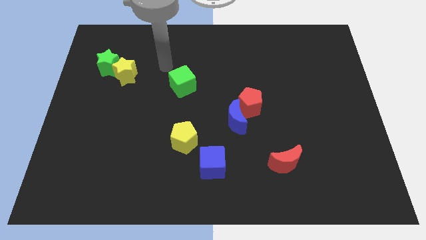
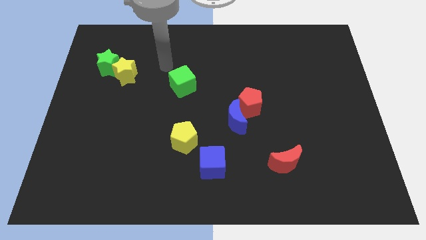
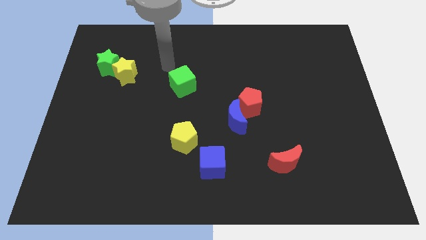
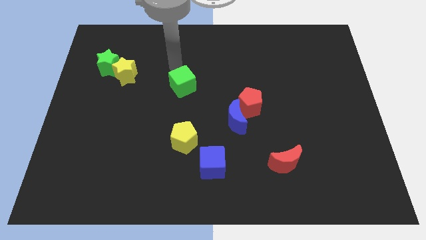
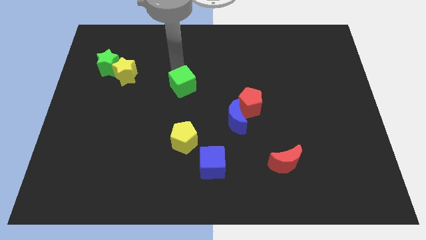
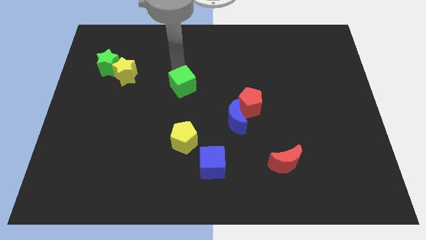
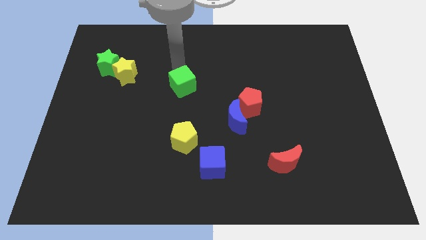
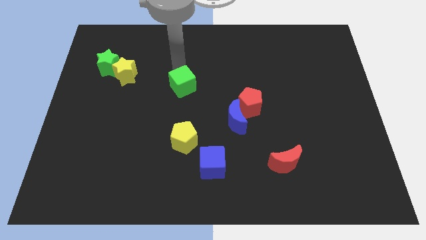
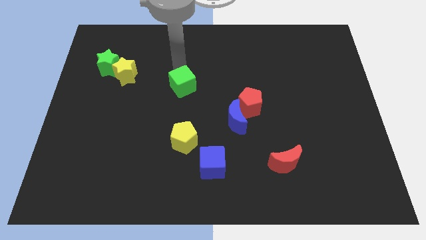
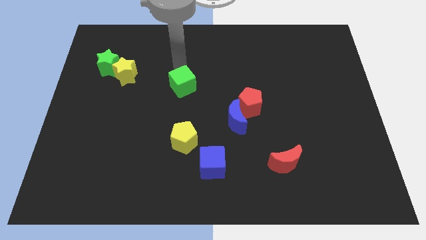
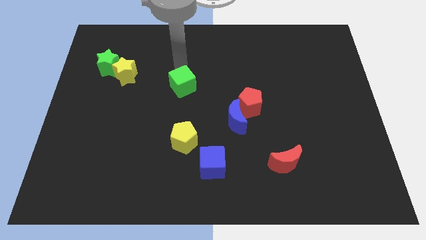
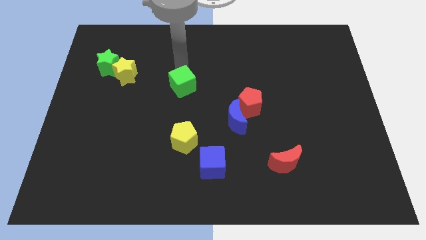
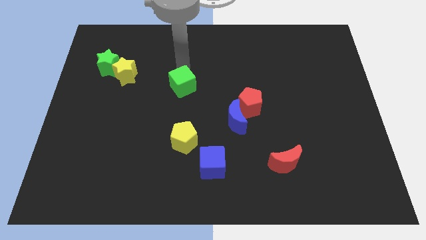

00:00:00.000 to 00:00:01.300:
point your arm at the top side of the green cube

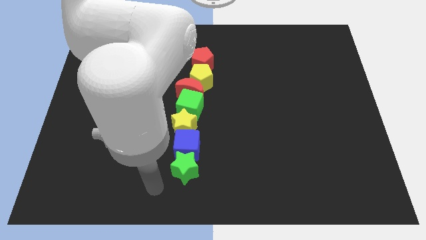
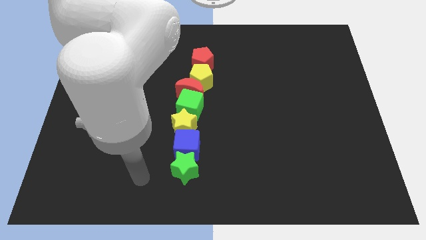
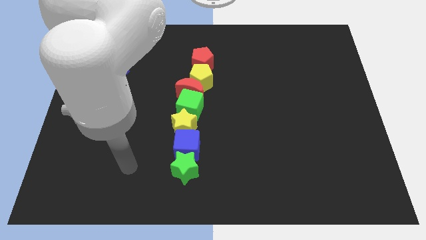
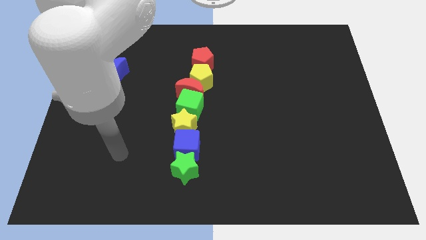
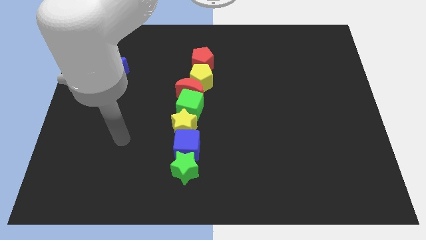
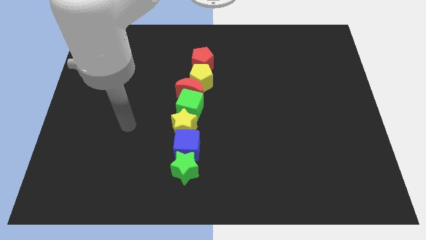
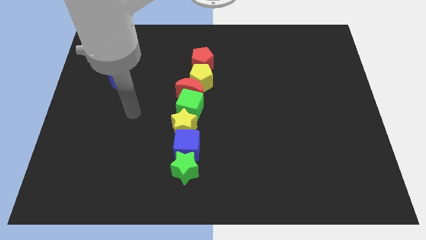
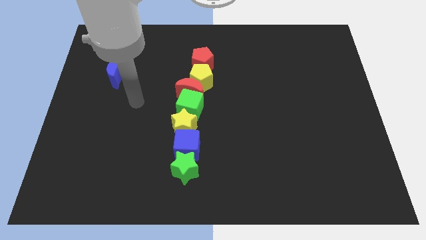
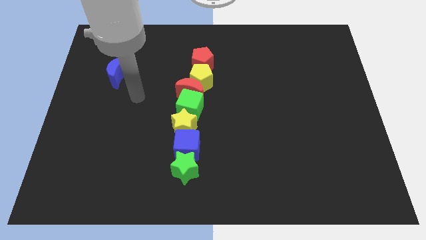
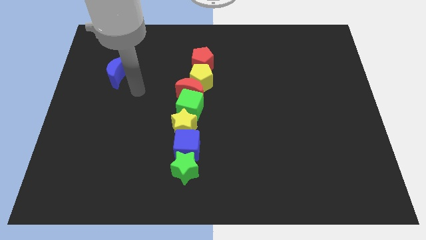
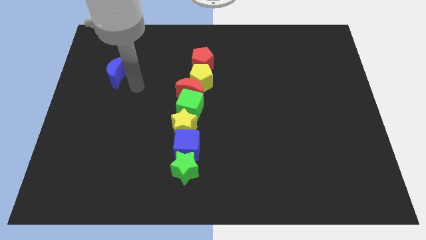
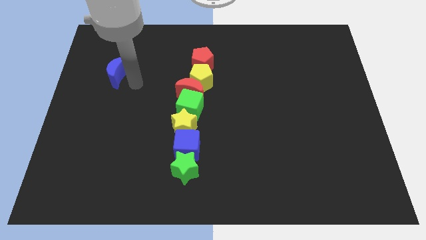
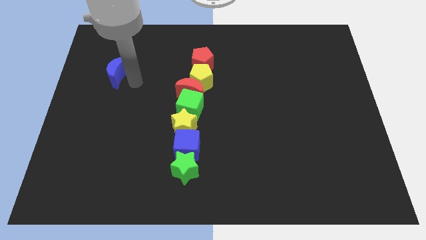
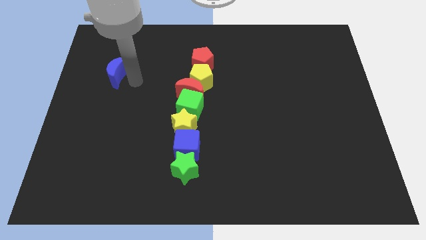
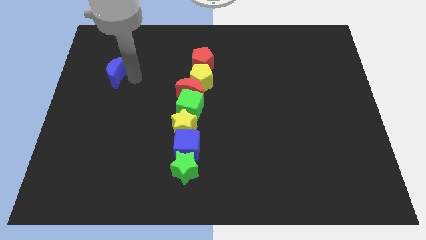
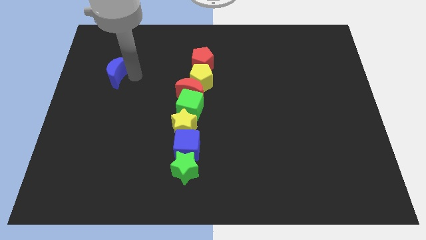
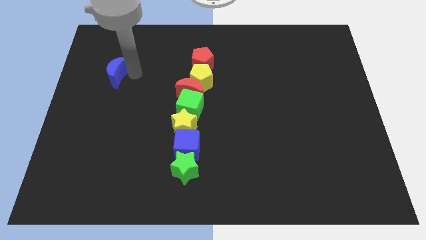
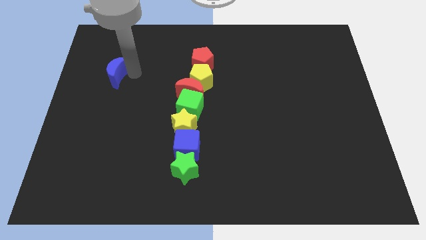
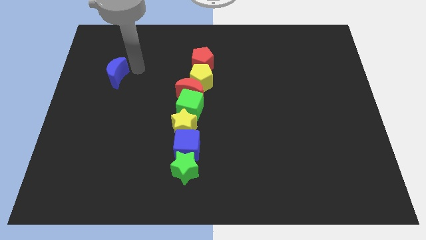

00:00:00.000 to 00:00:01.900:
put your hand to the right of the blue moon

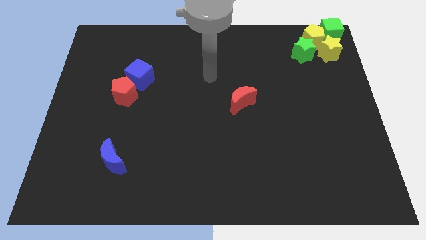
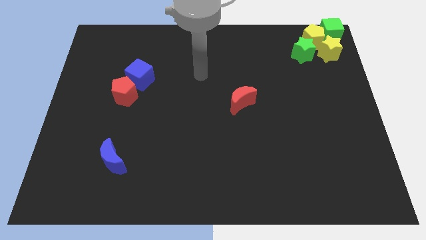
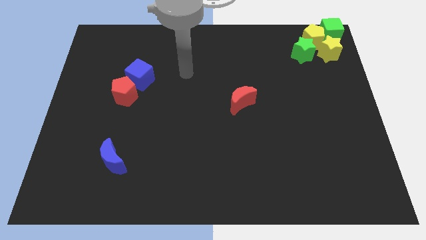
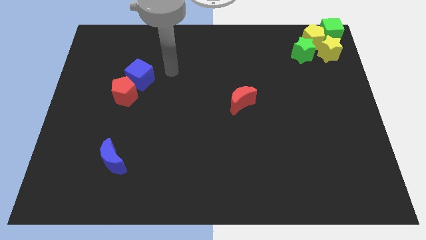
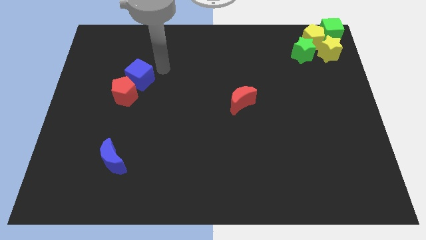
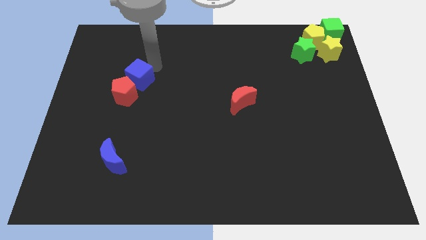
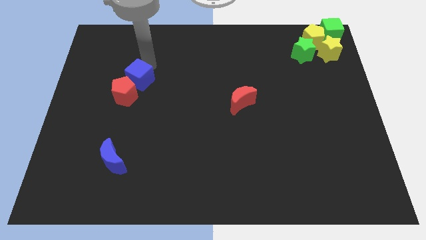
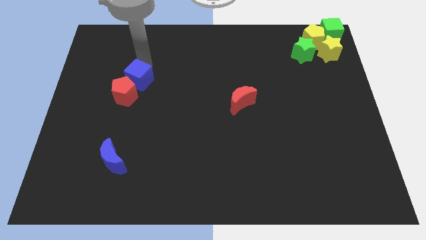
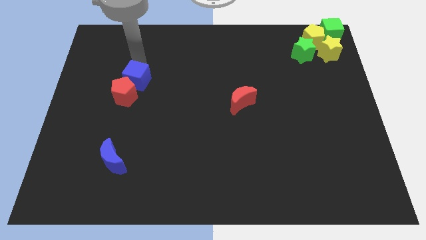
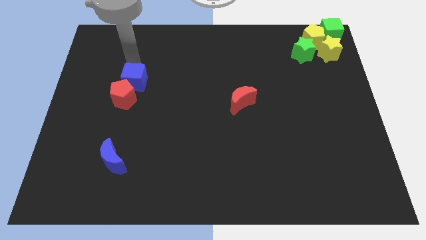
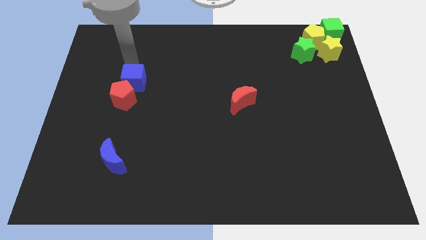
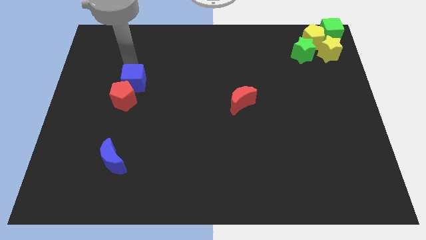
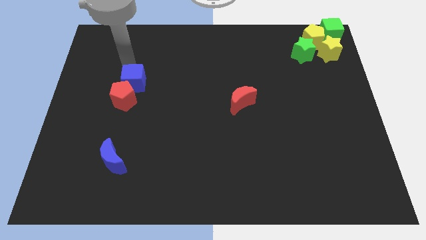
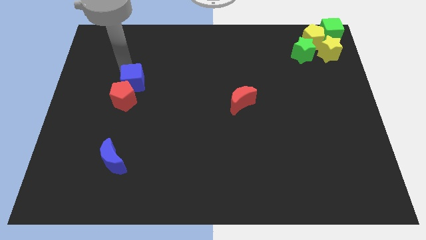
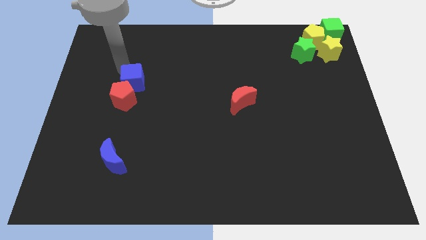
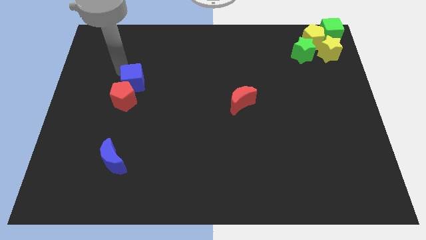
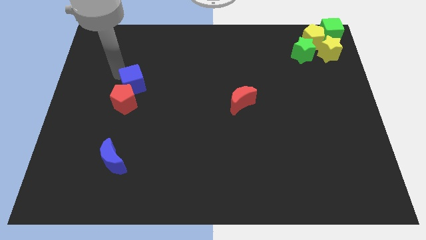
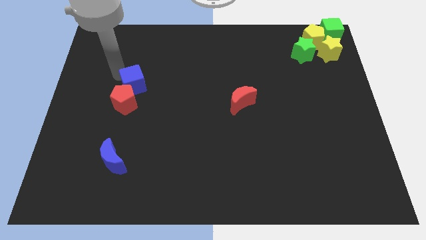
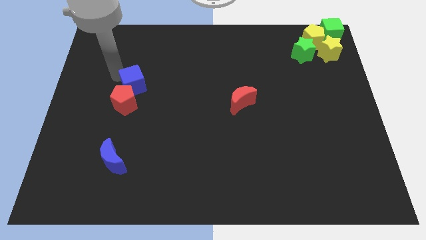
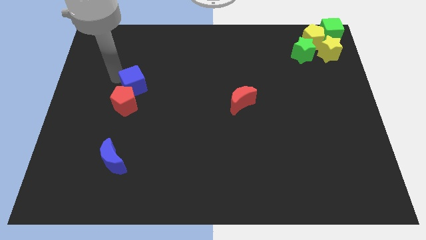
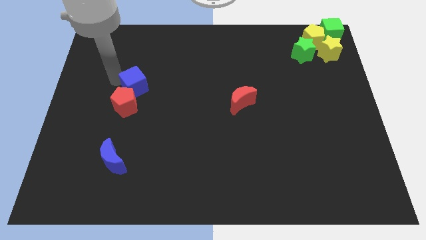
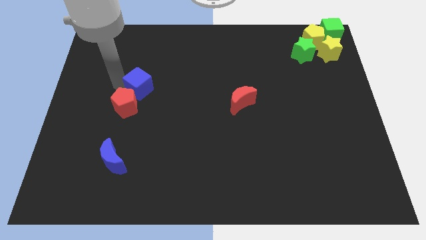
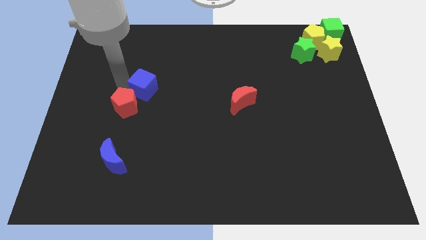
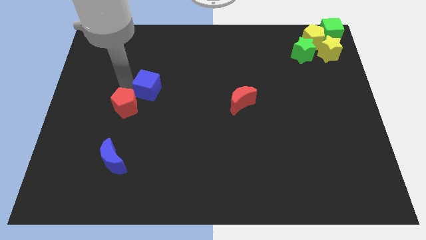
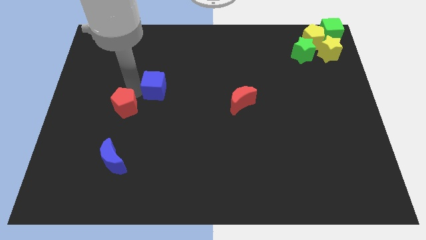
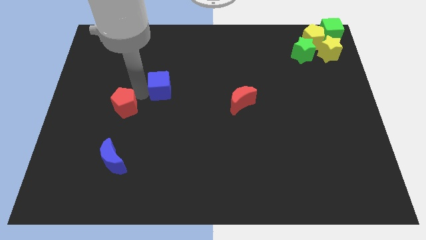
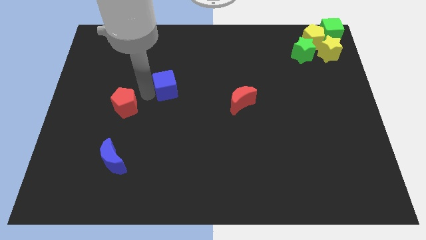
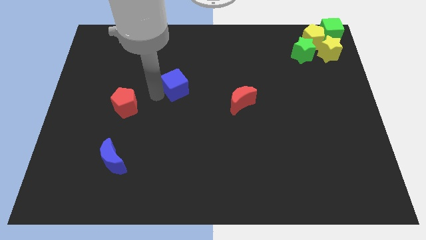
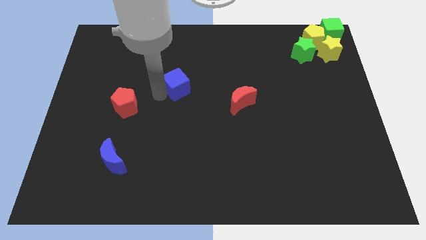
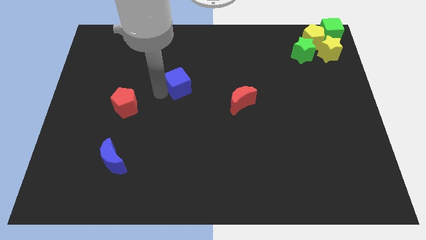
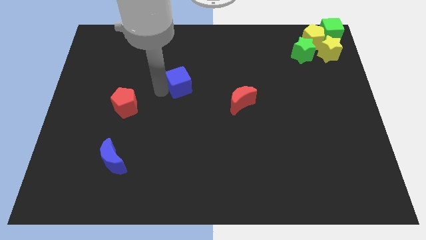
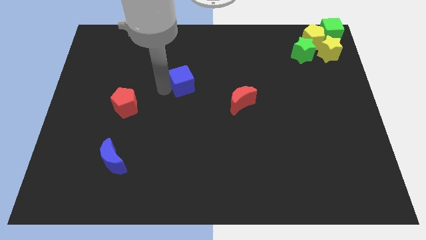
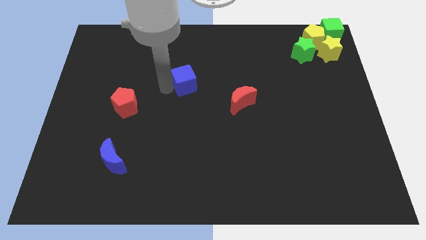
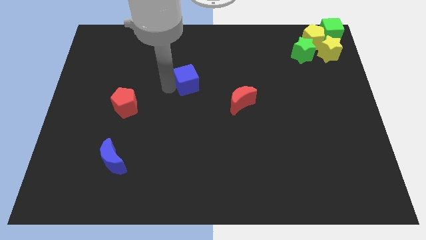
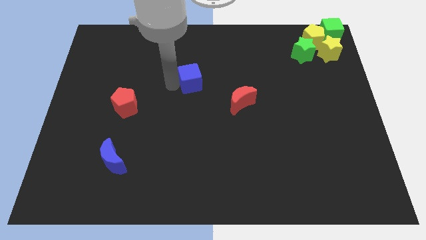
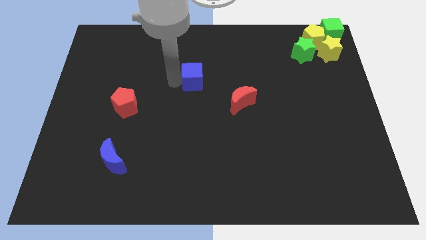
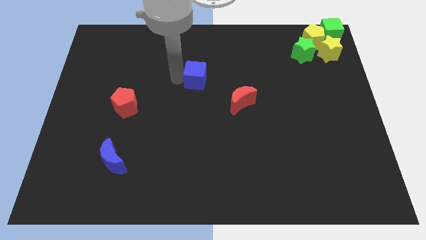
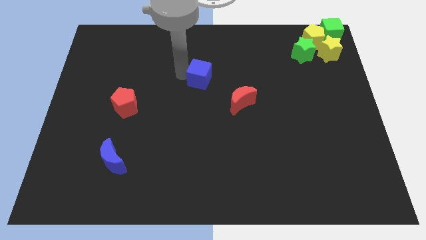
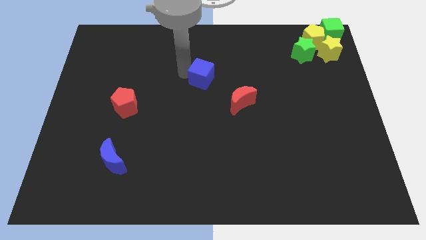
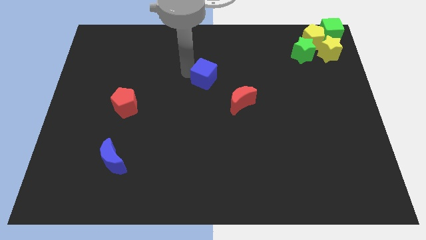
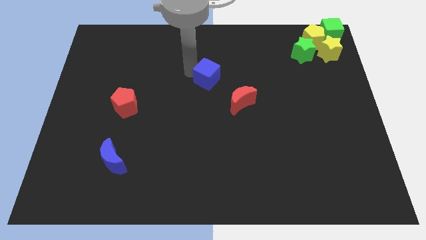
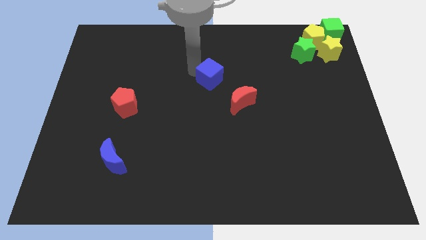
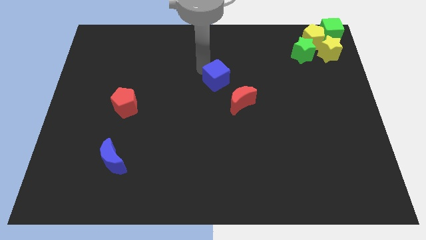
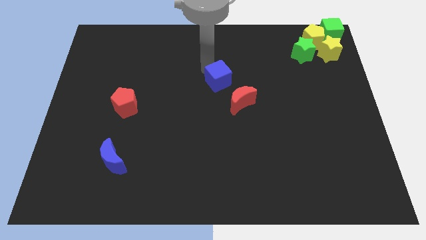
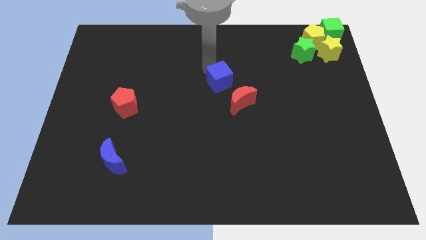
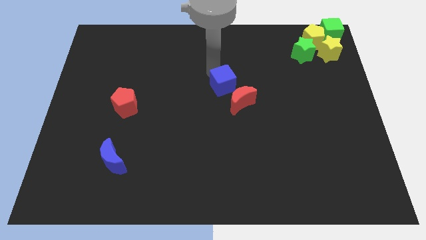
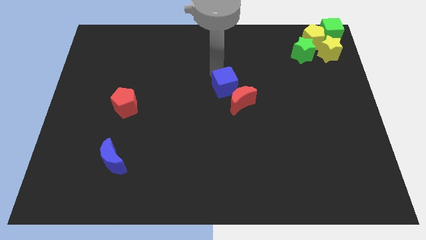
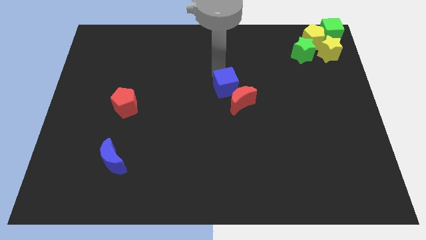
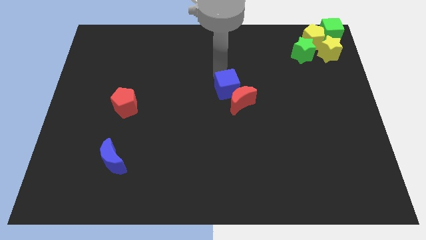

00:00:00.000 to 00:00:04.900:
move the blue cube to the top of the red moon

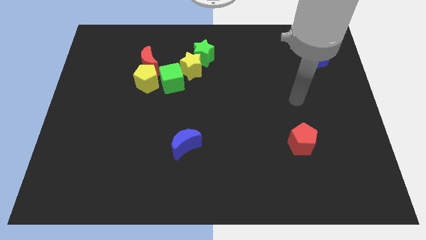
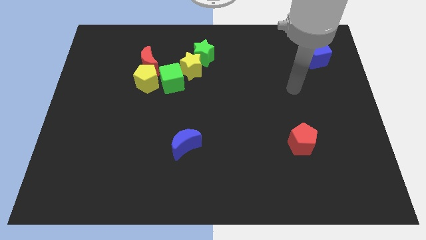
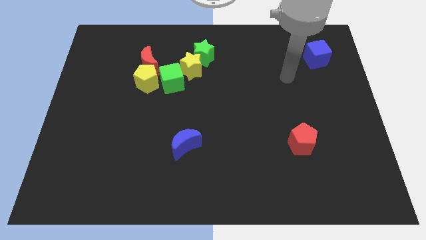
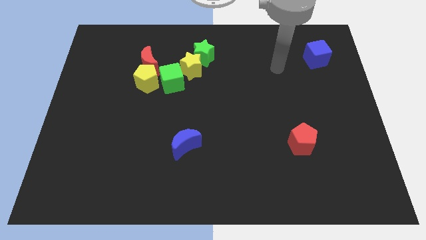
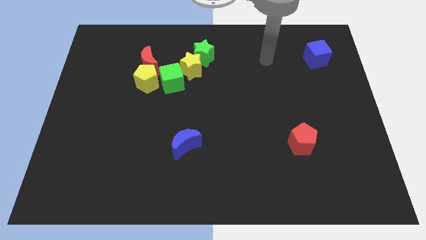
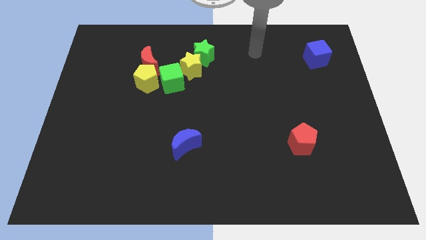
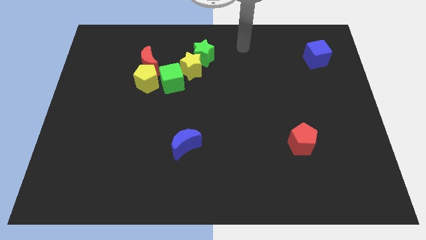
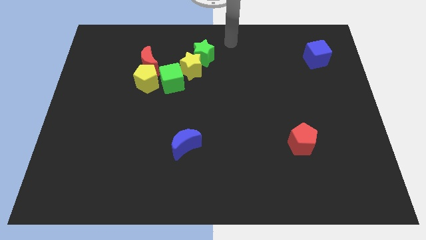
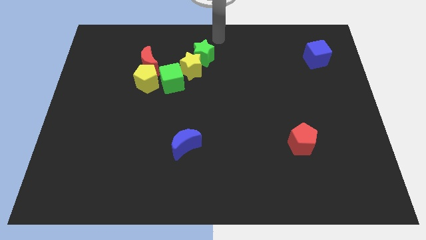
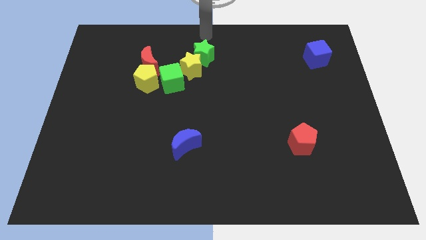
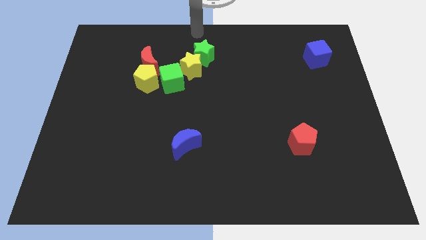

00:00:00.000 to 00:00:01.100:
place the arm near the green star
